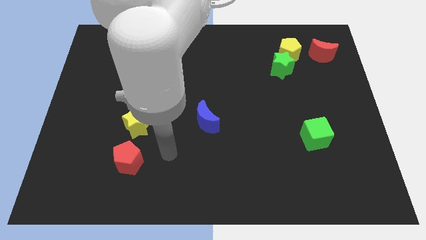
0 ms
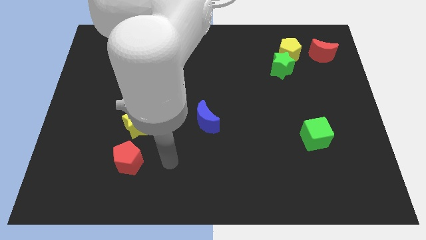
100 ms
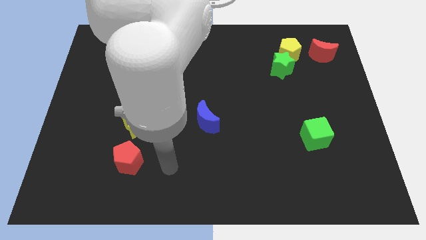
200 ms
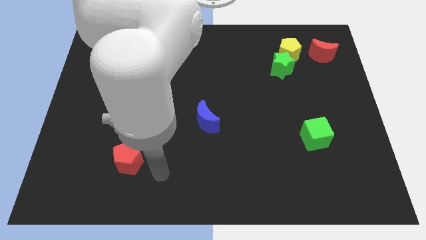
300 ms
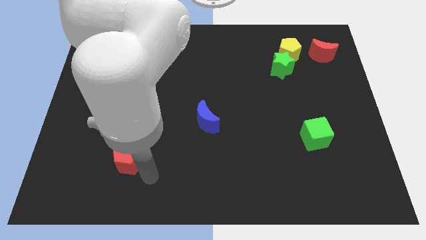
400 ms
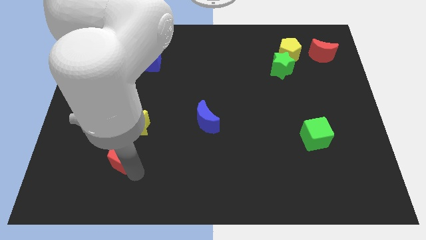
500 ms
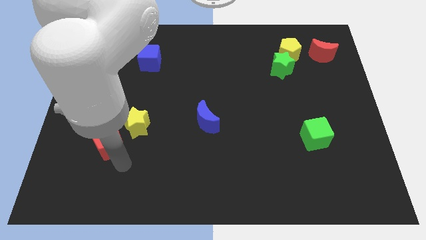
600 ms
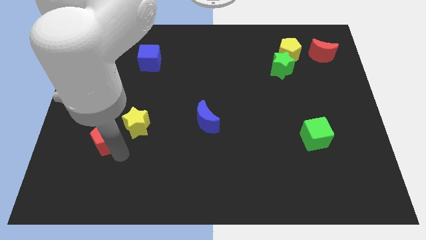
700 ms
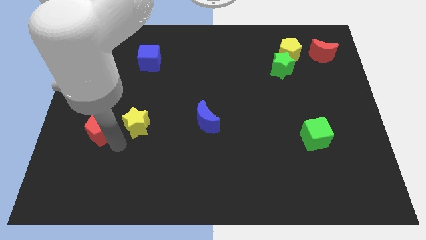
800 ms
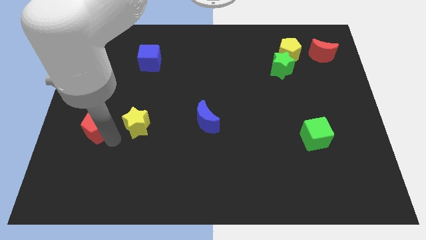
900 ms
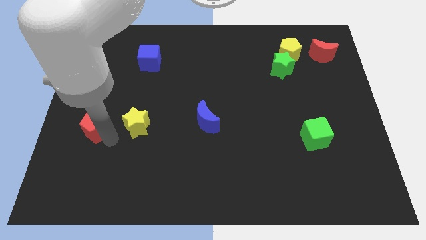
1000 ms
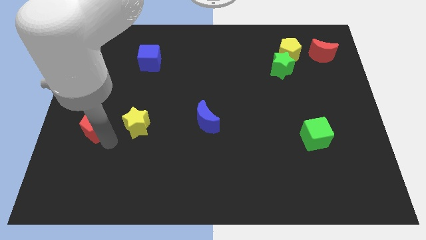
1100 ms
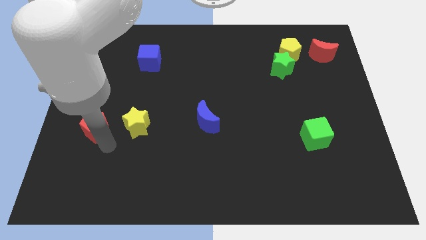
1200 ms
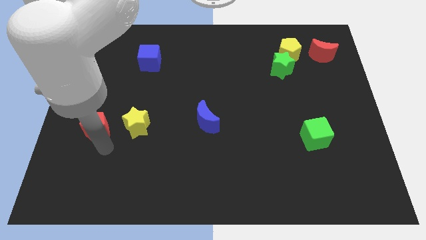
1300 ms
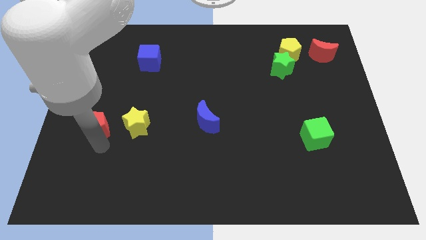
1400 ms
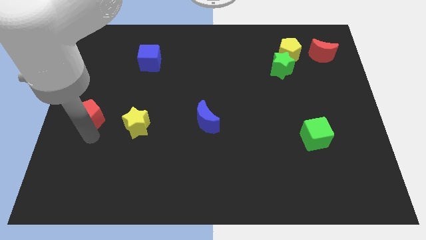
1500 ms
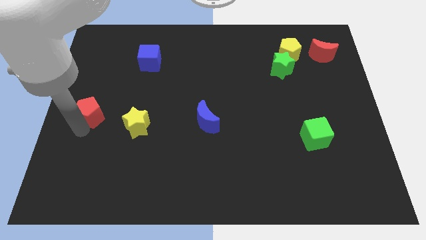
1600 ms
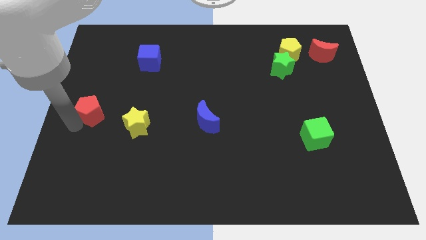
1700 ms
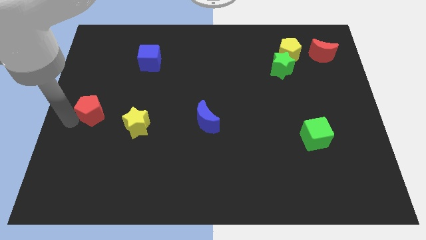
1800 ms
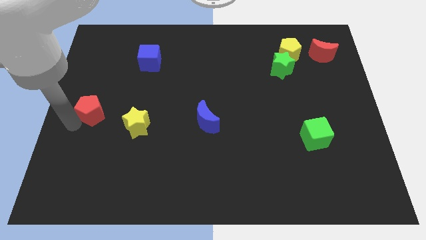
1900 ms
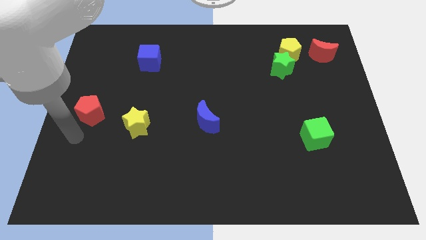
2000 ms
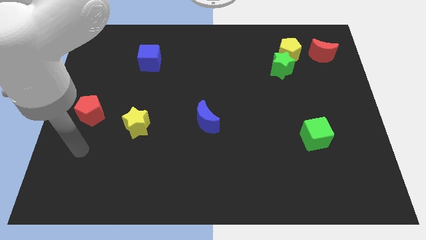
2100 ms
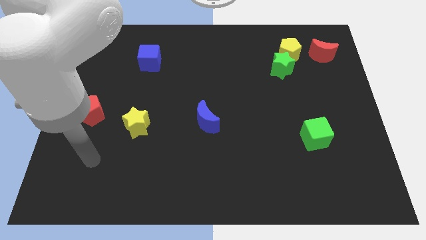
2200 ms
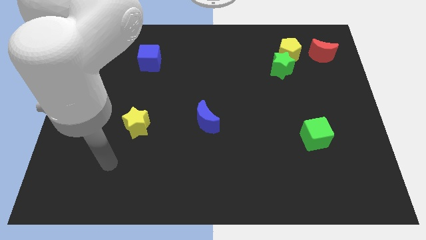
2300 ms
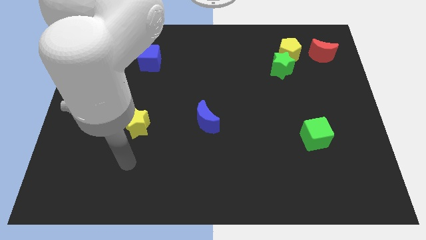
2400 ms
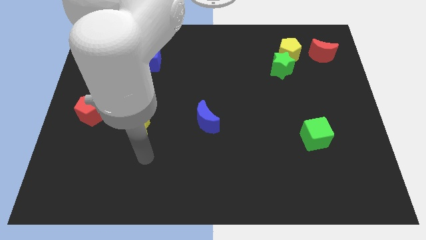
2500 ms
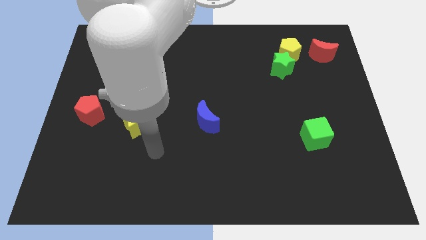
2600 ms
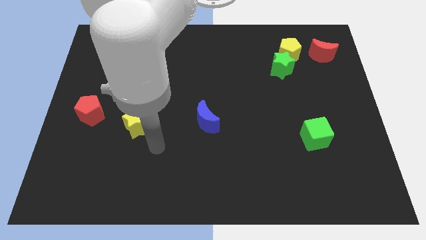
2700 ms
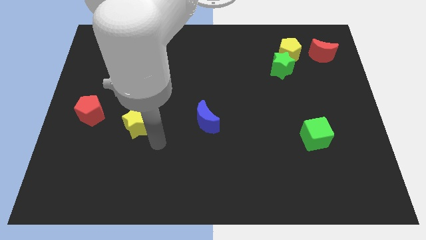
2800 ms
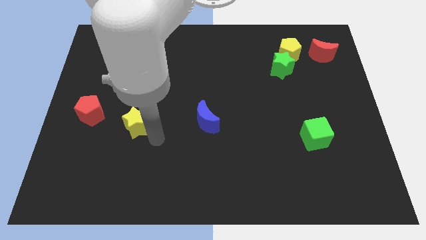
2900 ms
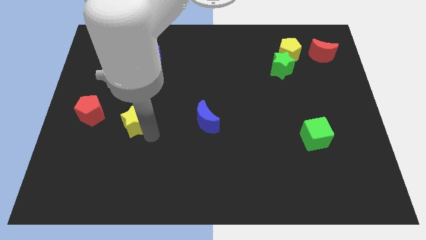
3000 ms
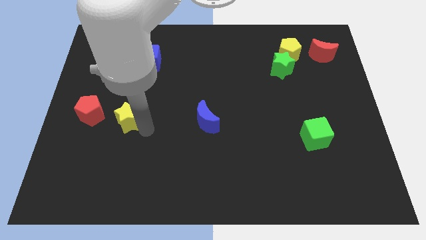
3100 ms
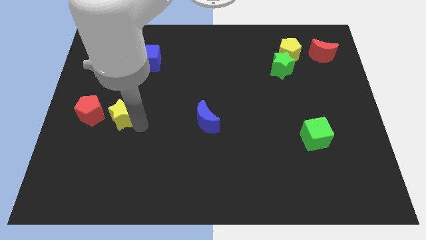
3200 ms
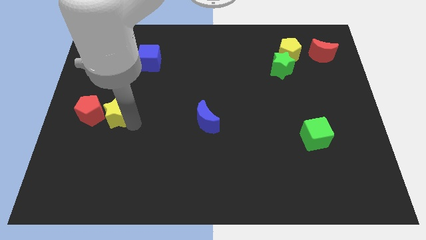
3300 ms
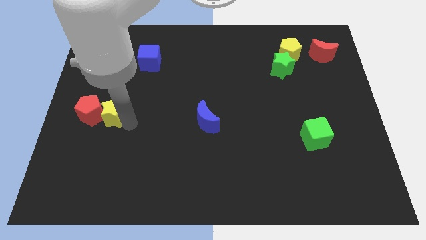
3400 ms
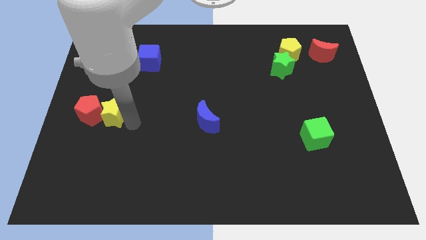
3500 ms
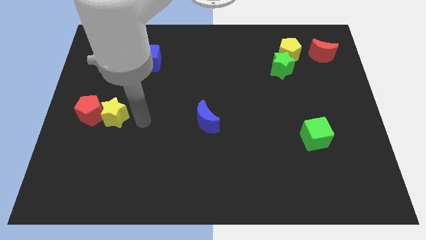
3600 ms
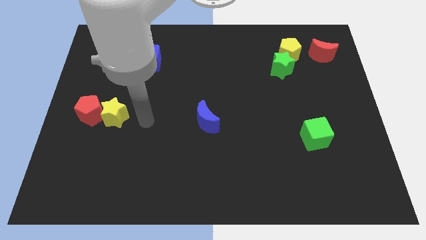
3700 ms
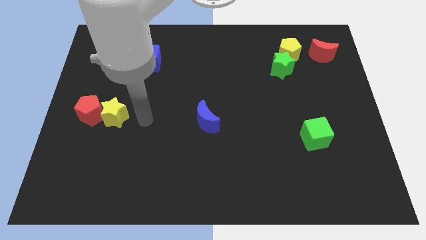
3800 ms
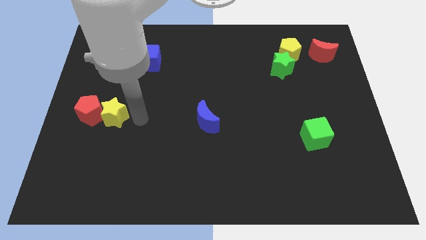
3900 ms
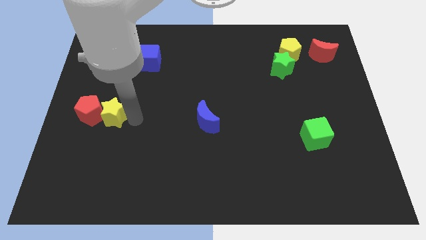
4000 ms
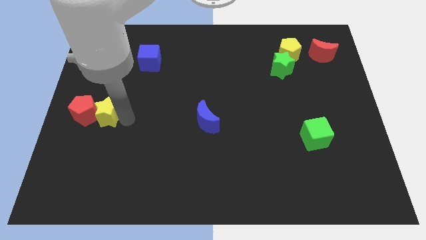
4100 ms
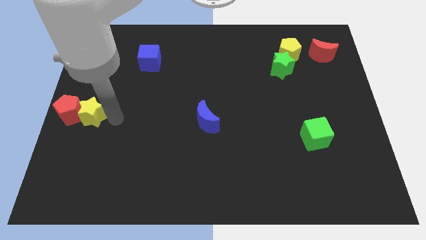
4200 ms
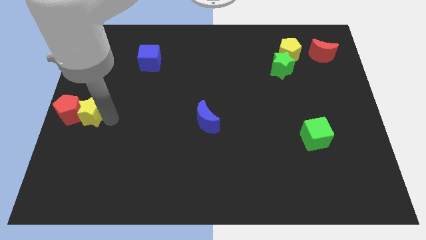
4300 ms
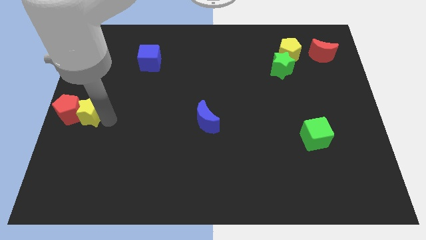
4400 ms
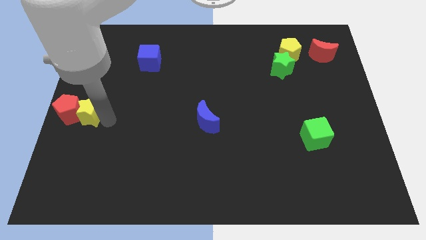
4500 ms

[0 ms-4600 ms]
move the red pentagon and yellow star to the center left of the table

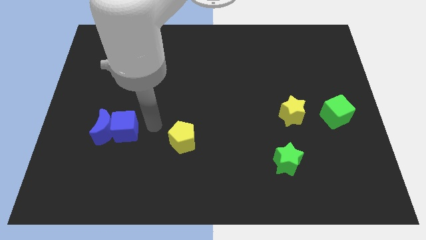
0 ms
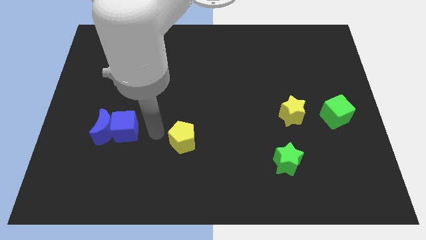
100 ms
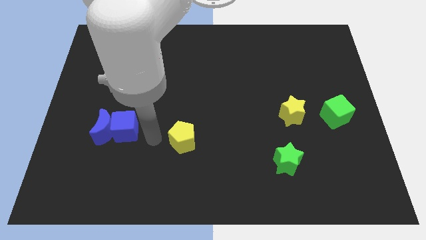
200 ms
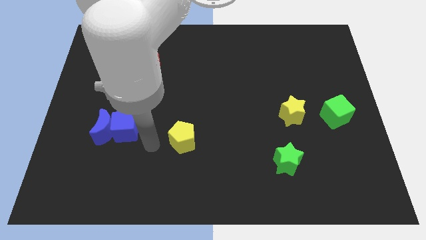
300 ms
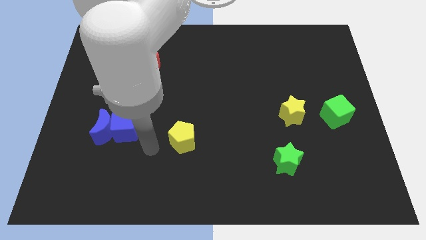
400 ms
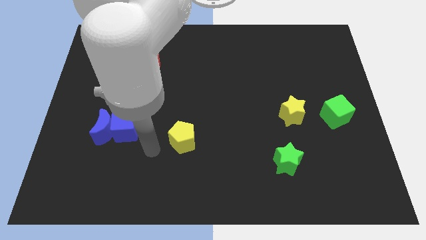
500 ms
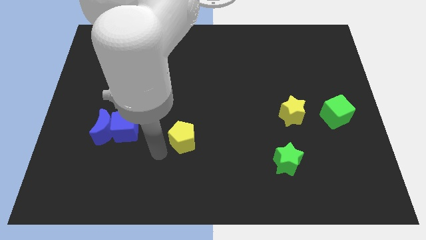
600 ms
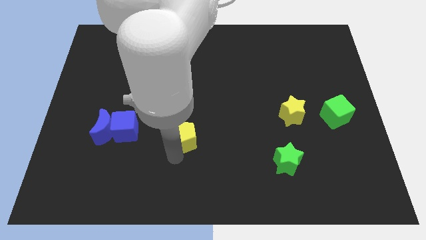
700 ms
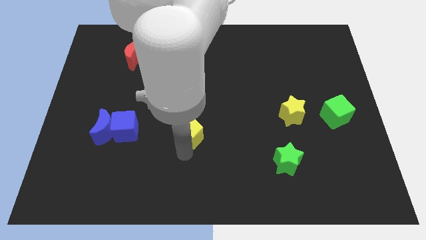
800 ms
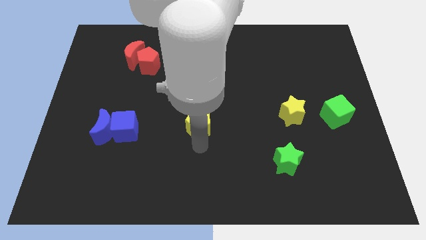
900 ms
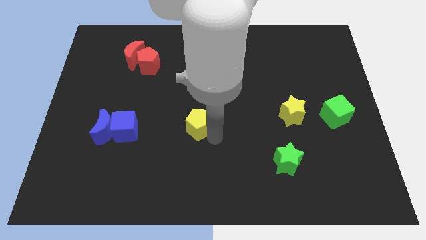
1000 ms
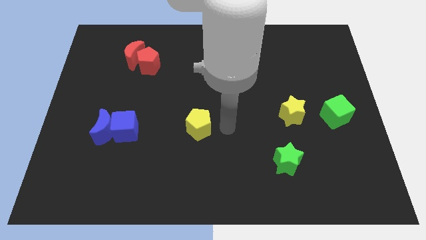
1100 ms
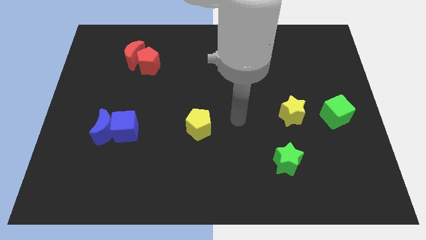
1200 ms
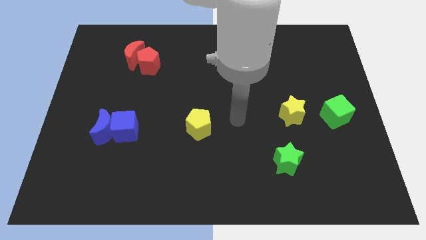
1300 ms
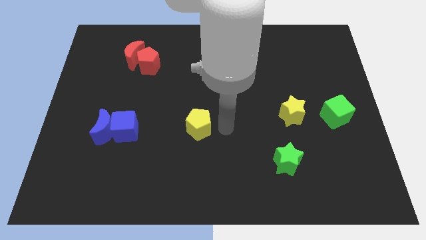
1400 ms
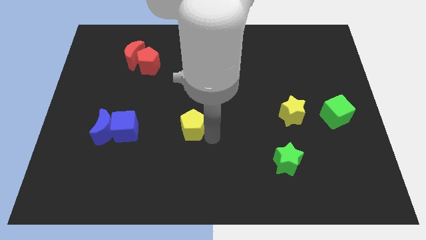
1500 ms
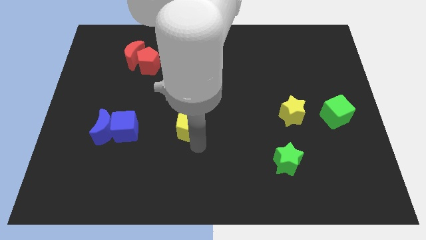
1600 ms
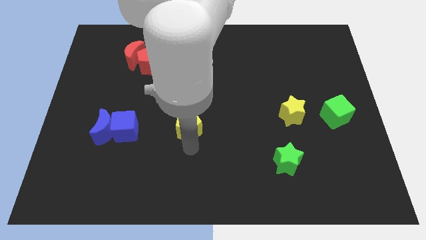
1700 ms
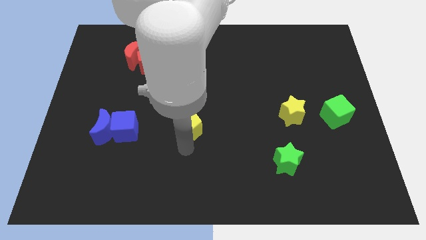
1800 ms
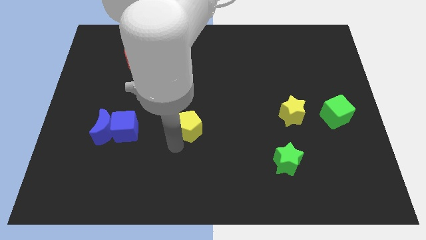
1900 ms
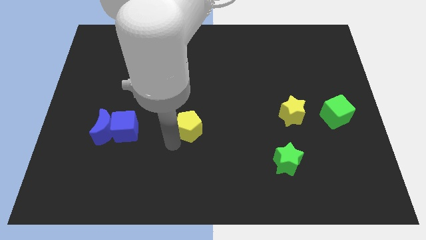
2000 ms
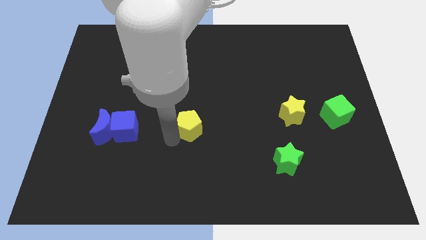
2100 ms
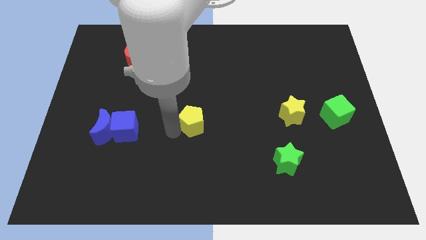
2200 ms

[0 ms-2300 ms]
move the yellow pentagon to the right of the blue cube

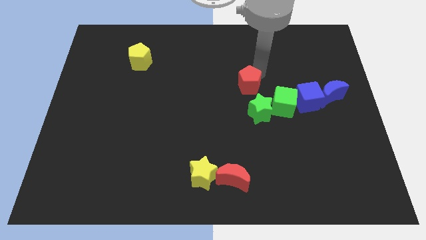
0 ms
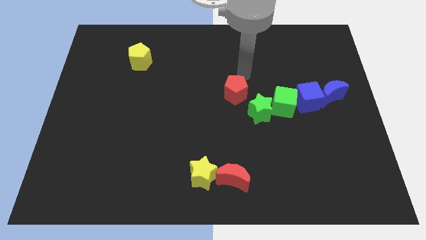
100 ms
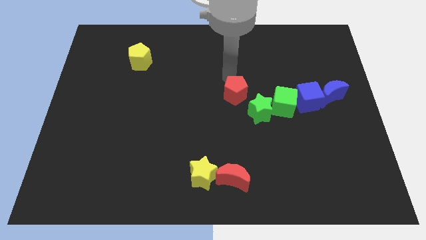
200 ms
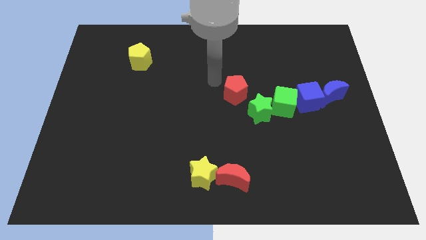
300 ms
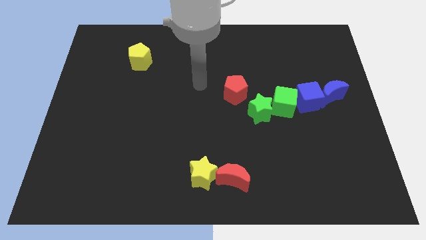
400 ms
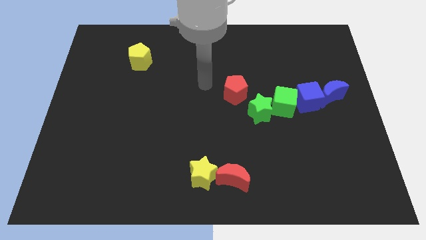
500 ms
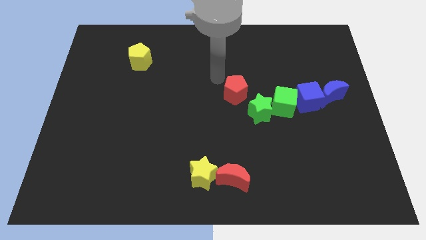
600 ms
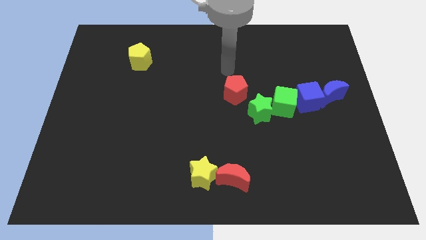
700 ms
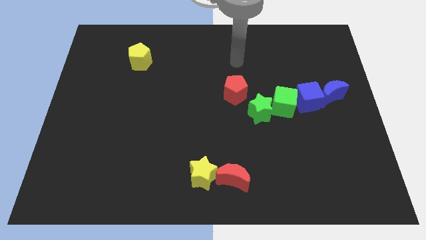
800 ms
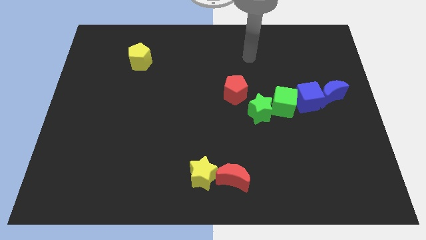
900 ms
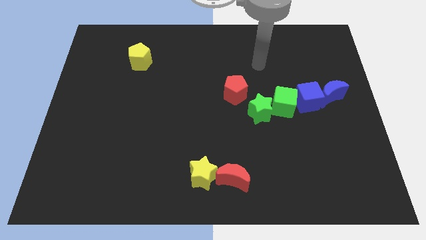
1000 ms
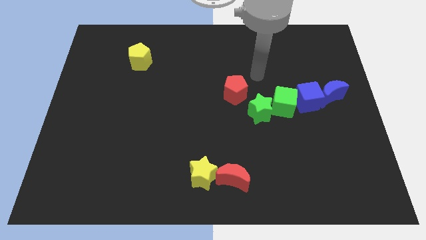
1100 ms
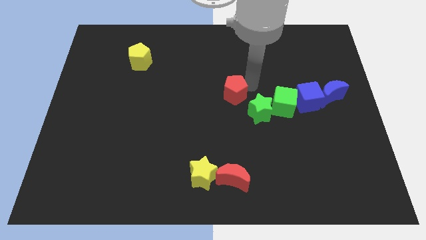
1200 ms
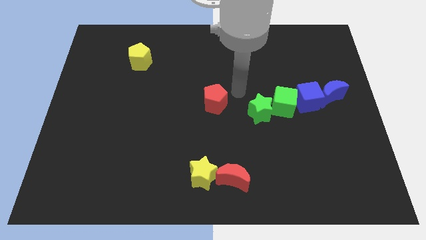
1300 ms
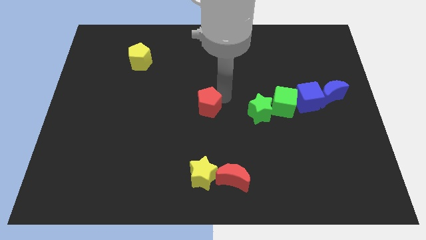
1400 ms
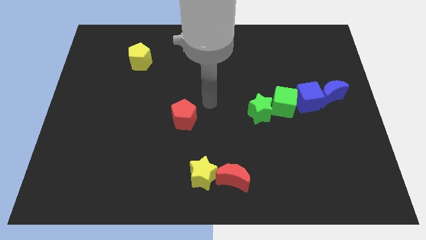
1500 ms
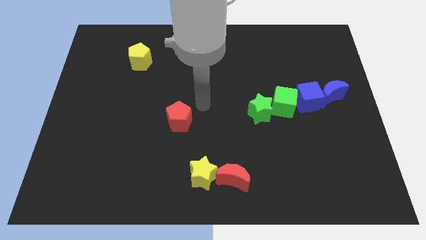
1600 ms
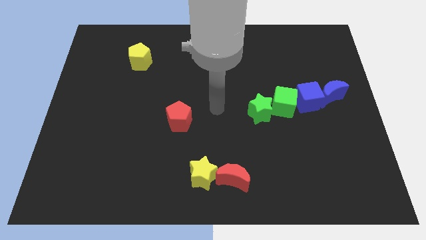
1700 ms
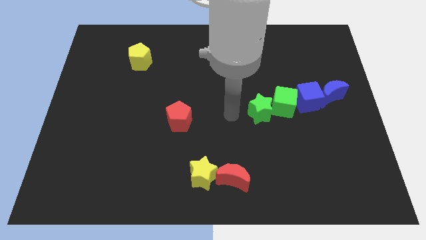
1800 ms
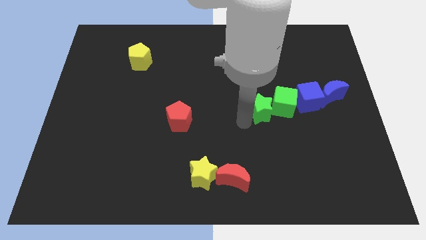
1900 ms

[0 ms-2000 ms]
put the red pentagon between the yellow blocks
